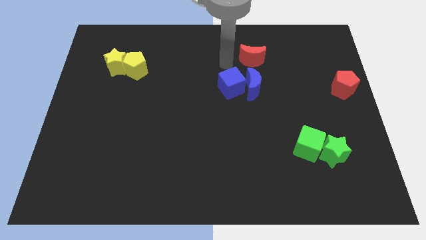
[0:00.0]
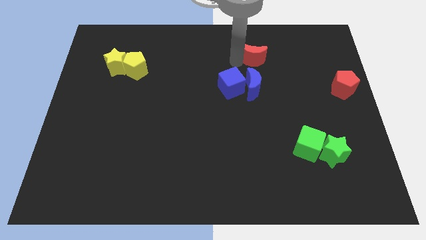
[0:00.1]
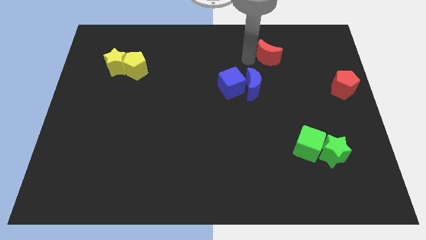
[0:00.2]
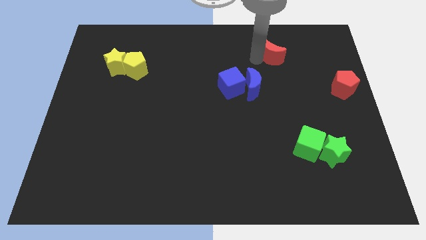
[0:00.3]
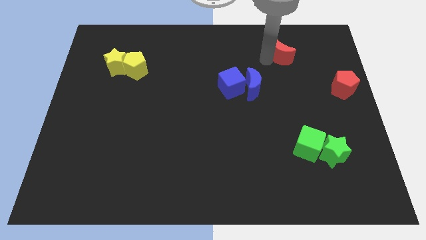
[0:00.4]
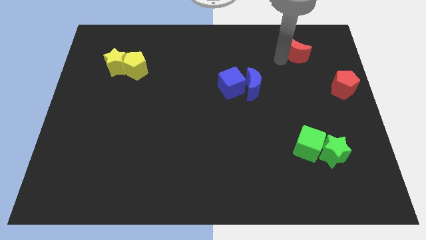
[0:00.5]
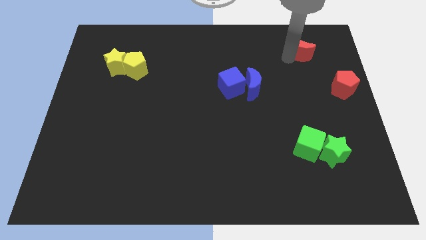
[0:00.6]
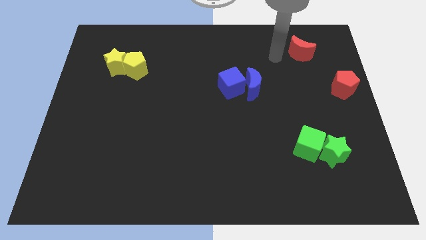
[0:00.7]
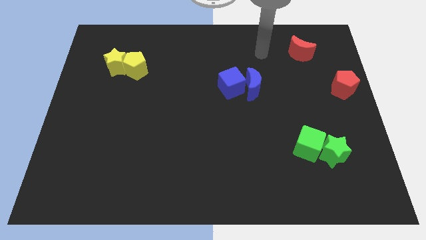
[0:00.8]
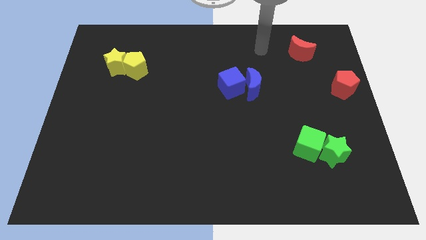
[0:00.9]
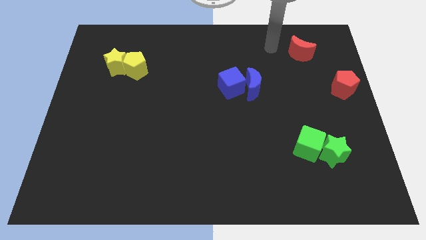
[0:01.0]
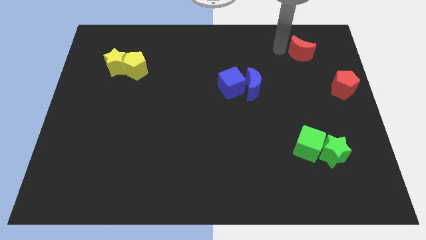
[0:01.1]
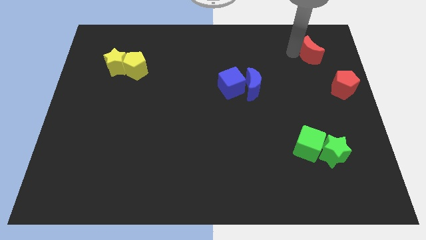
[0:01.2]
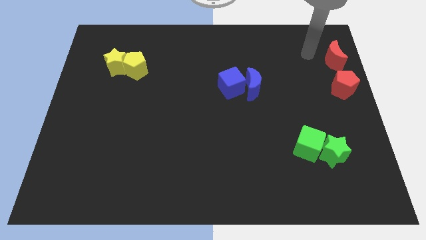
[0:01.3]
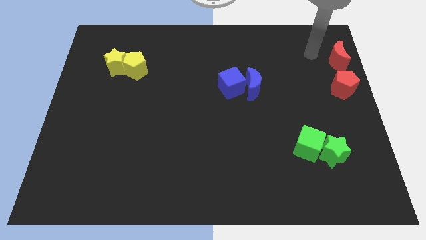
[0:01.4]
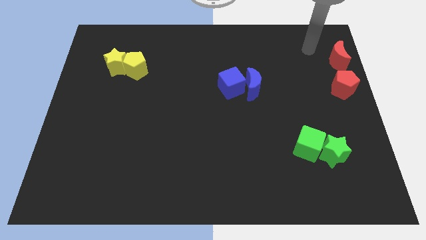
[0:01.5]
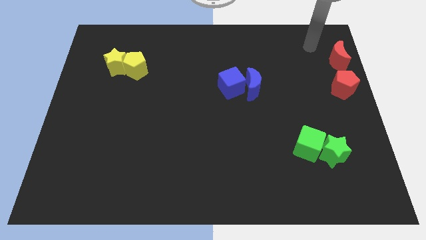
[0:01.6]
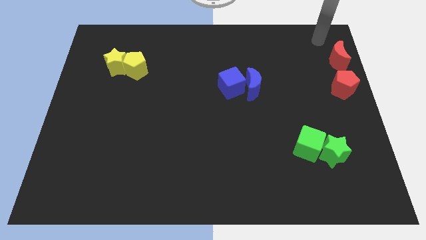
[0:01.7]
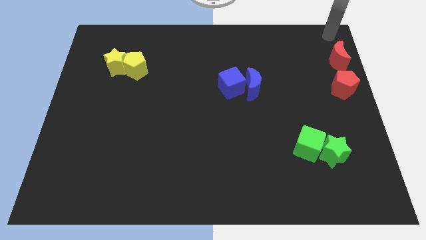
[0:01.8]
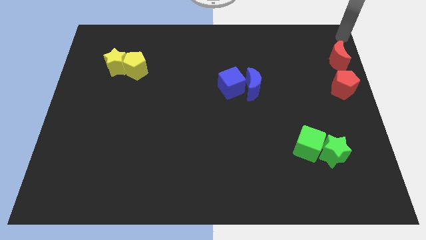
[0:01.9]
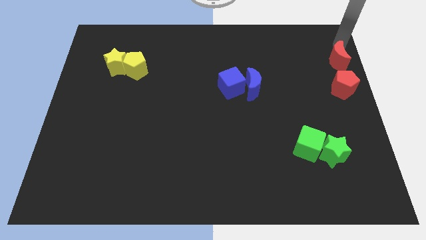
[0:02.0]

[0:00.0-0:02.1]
move red crescent to the top right side of the board

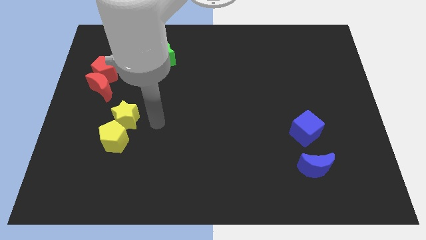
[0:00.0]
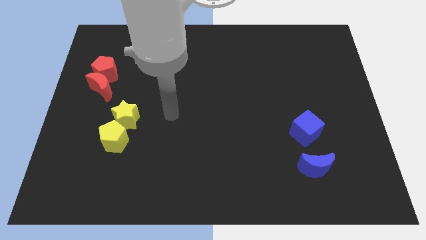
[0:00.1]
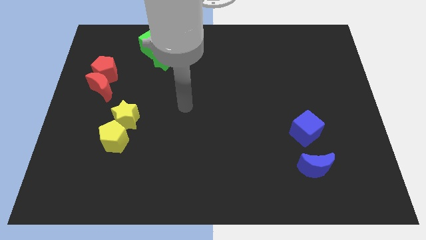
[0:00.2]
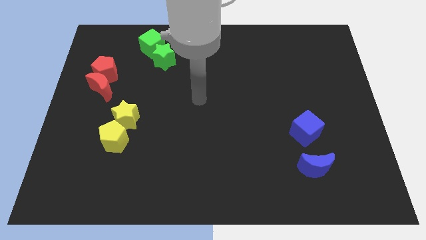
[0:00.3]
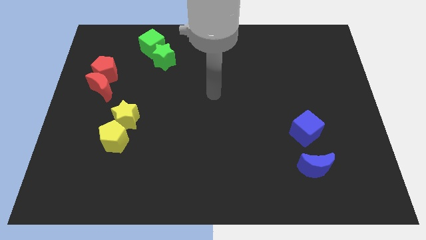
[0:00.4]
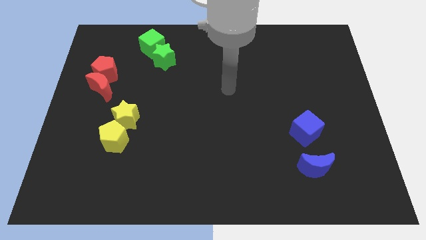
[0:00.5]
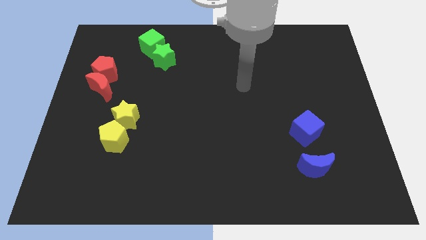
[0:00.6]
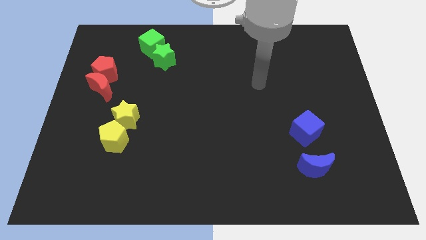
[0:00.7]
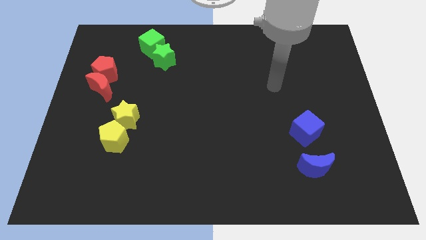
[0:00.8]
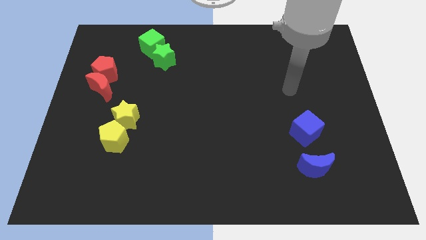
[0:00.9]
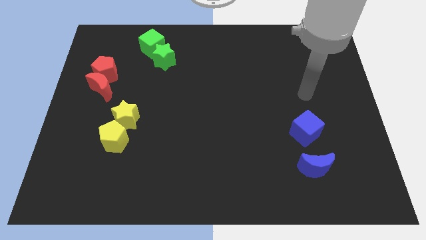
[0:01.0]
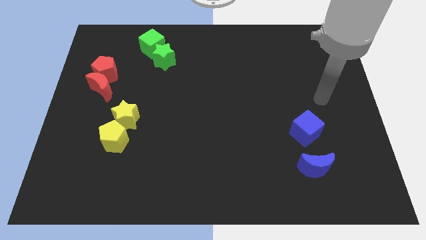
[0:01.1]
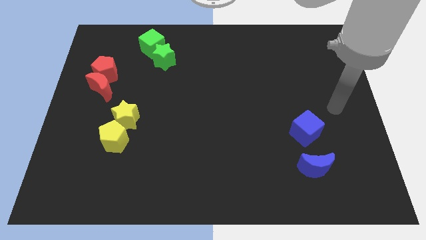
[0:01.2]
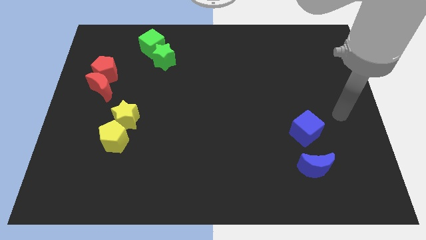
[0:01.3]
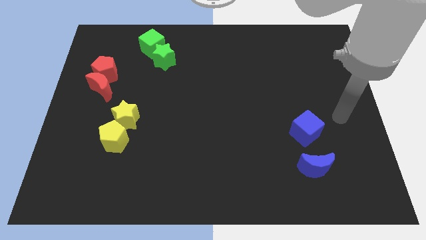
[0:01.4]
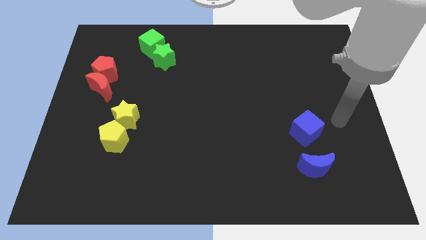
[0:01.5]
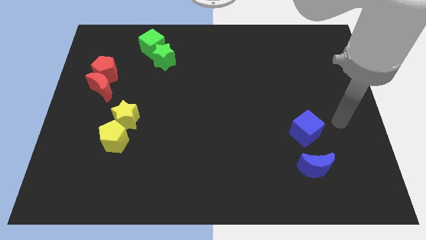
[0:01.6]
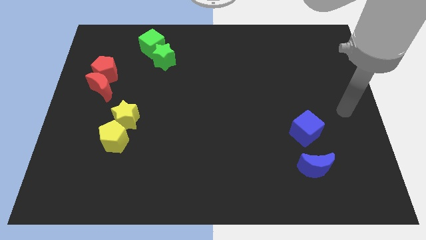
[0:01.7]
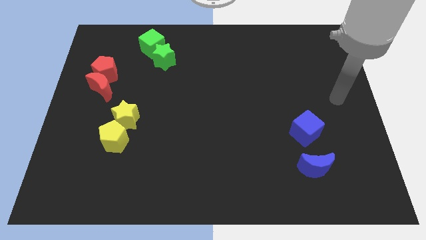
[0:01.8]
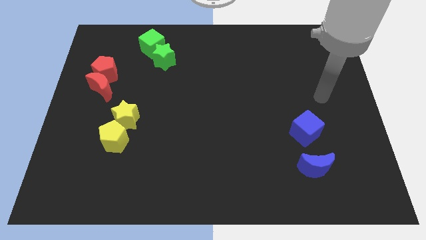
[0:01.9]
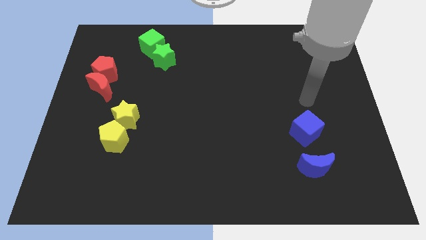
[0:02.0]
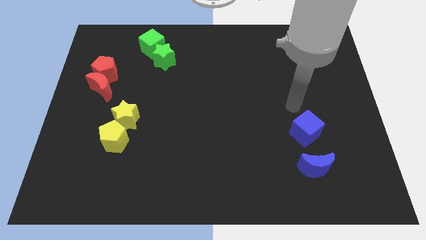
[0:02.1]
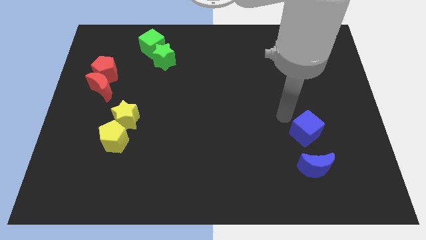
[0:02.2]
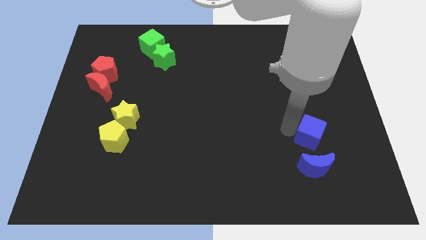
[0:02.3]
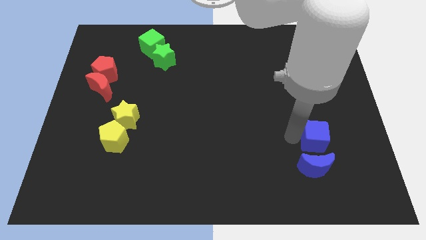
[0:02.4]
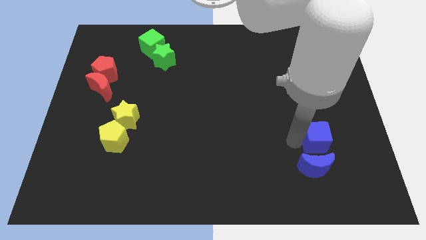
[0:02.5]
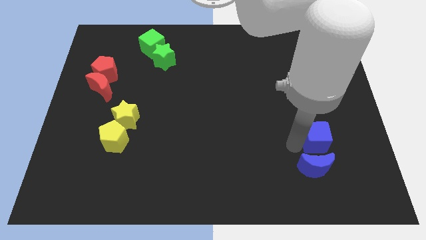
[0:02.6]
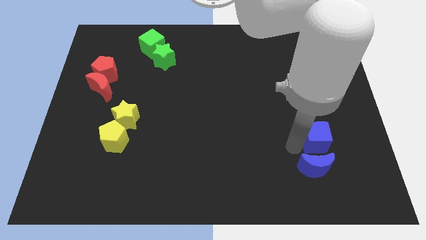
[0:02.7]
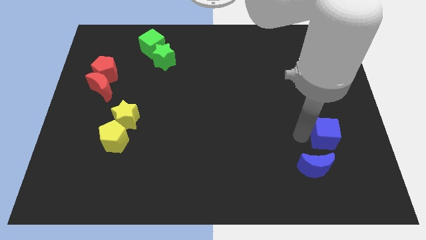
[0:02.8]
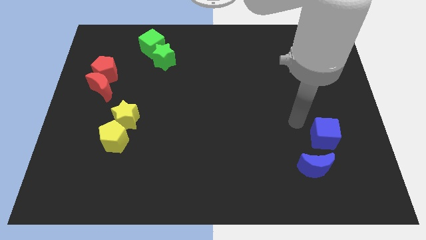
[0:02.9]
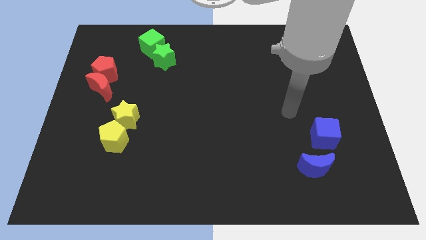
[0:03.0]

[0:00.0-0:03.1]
push the blue cube to the top of the blue crescent

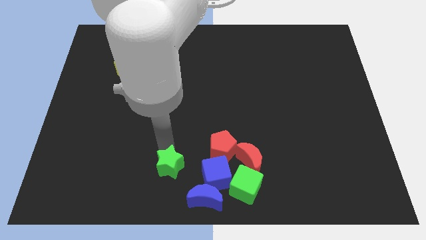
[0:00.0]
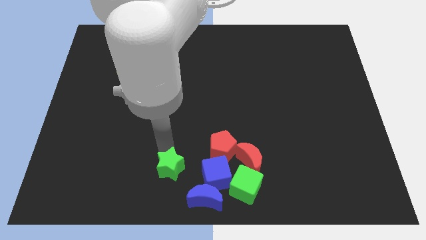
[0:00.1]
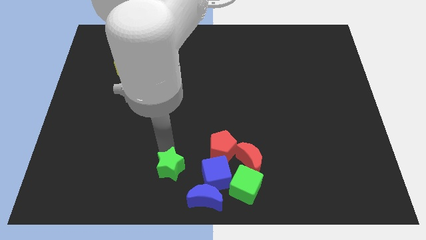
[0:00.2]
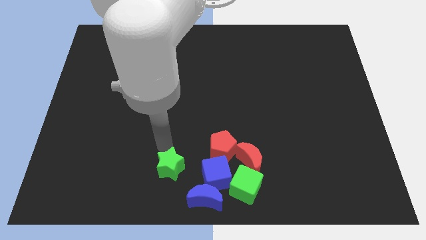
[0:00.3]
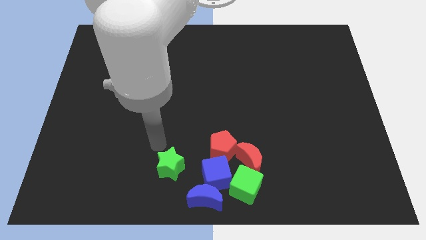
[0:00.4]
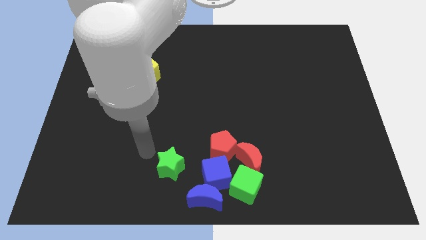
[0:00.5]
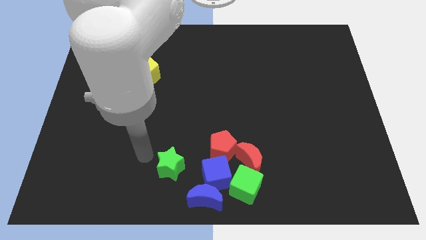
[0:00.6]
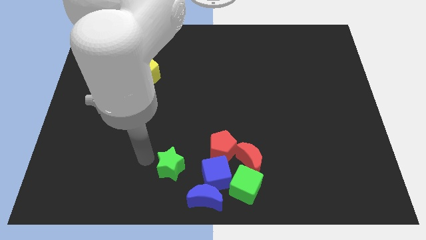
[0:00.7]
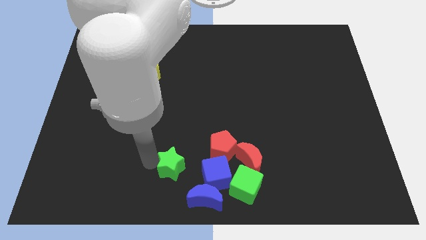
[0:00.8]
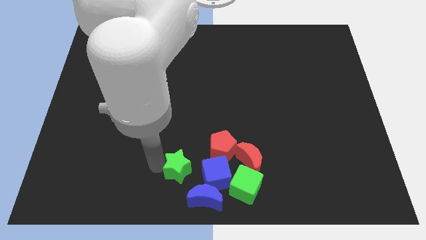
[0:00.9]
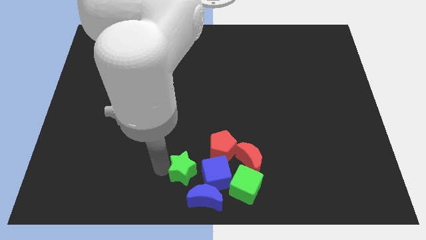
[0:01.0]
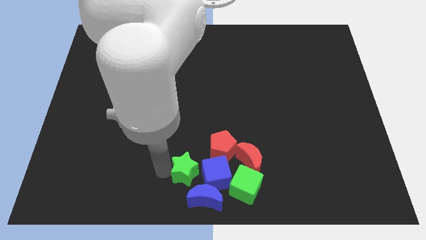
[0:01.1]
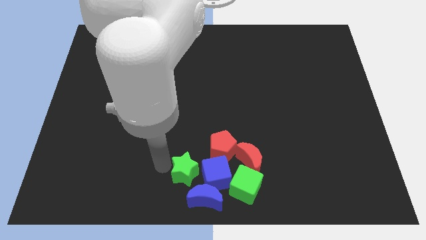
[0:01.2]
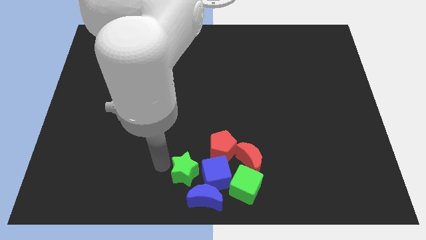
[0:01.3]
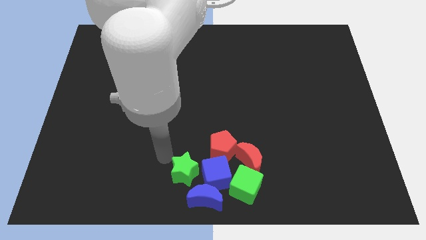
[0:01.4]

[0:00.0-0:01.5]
push the green star close to the blue cube

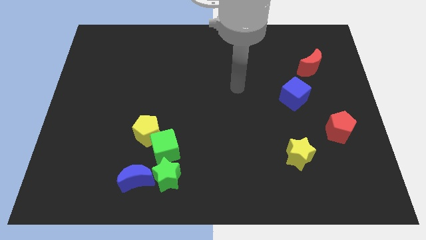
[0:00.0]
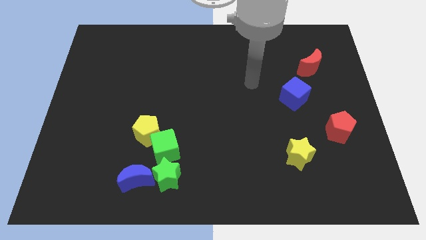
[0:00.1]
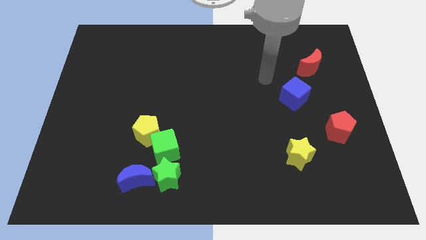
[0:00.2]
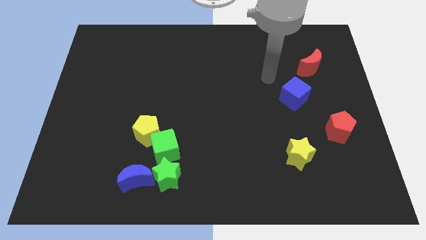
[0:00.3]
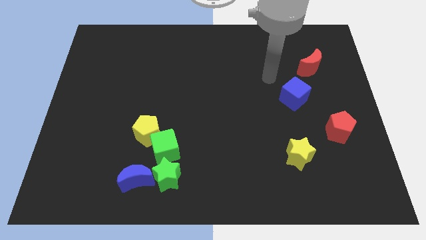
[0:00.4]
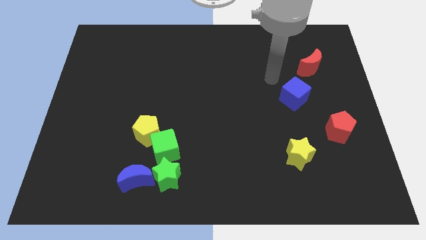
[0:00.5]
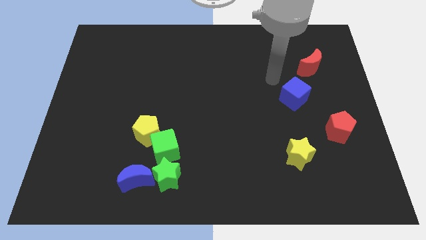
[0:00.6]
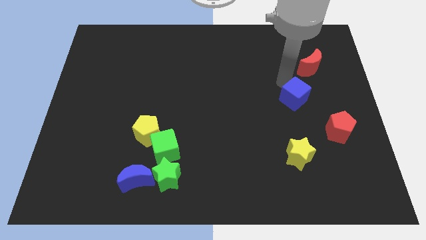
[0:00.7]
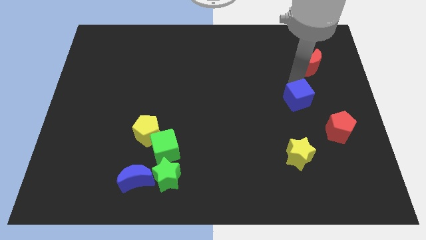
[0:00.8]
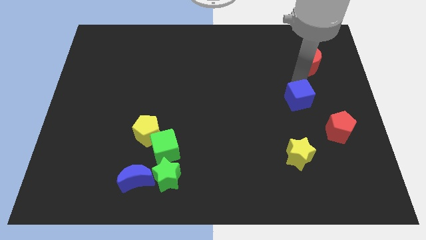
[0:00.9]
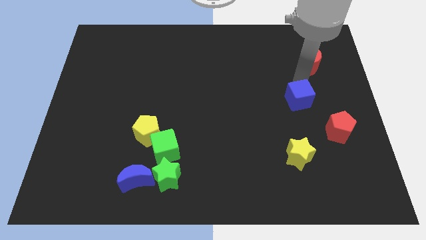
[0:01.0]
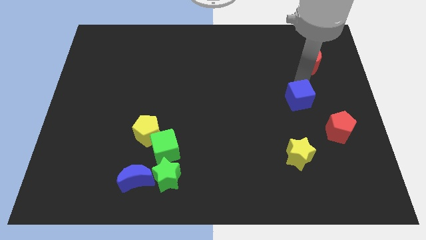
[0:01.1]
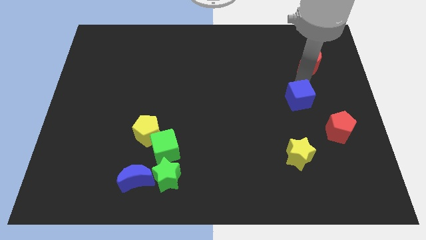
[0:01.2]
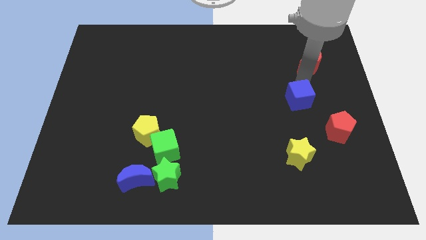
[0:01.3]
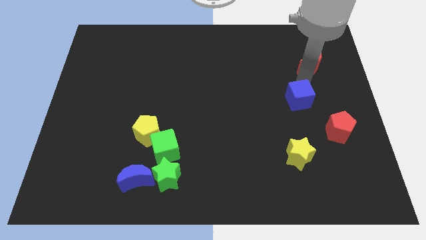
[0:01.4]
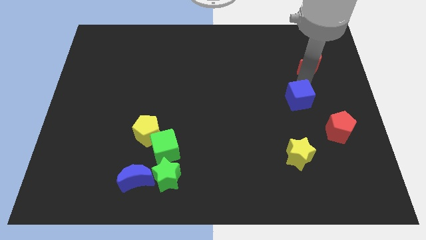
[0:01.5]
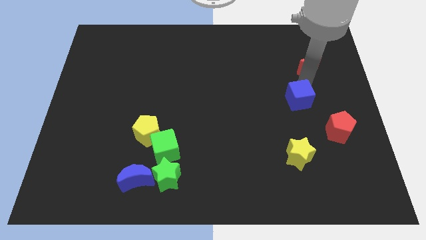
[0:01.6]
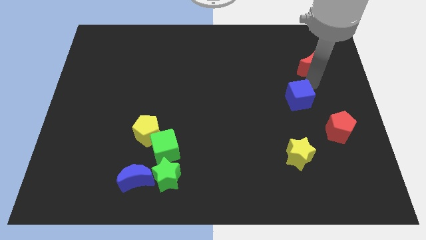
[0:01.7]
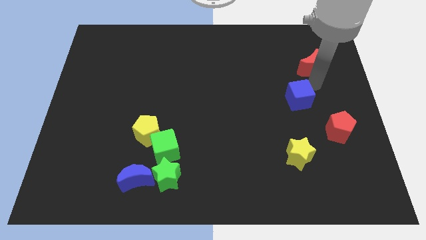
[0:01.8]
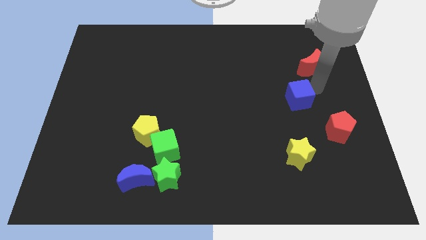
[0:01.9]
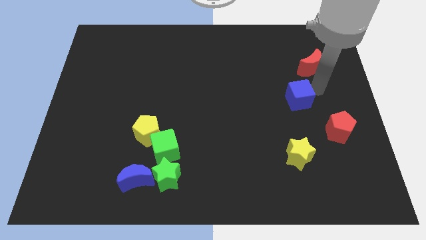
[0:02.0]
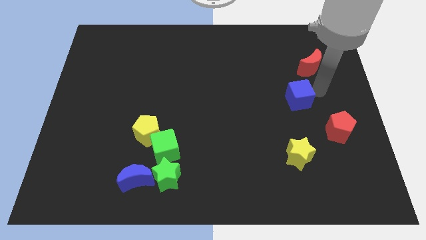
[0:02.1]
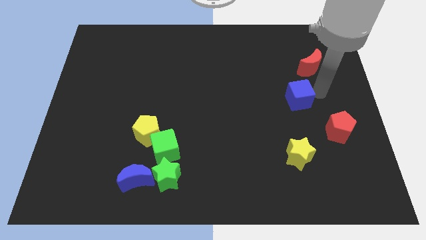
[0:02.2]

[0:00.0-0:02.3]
place the arm to the right side of the blue cube
